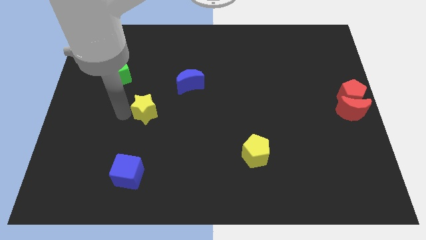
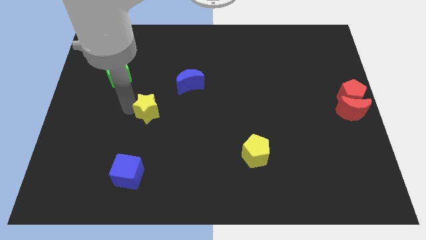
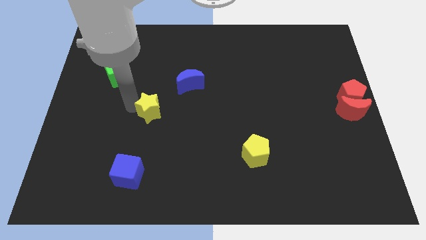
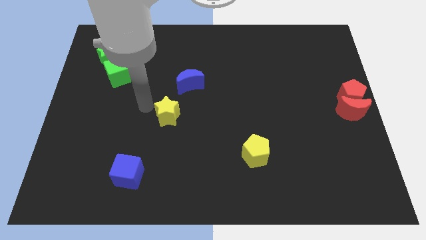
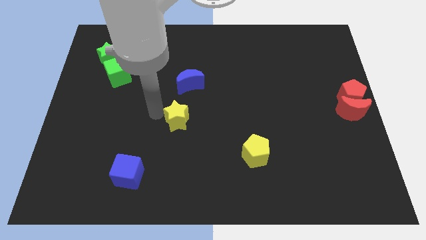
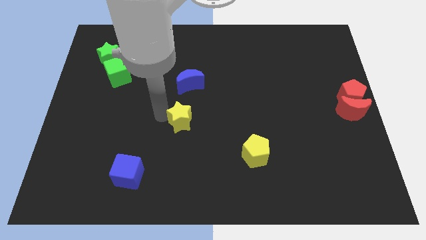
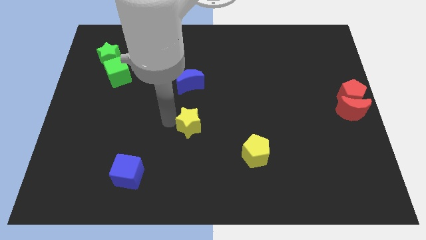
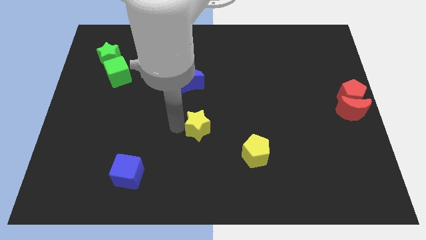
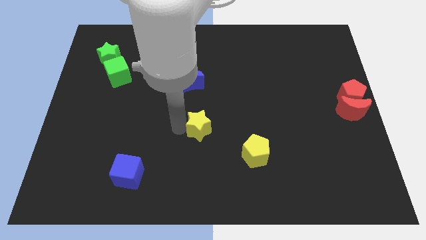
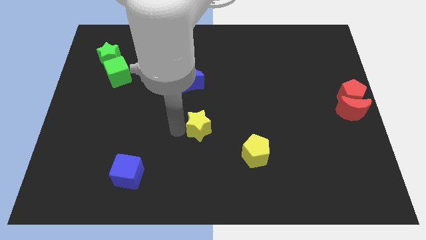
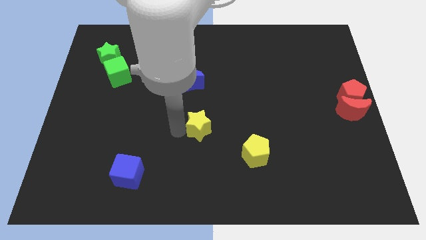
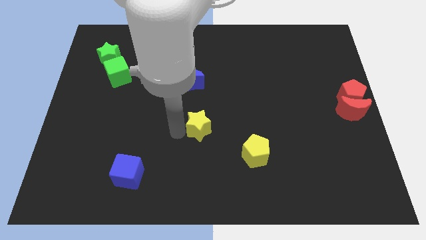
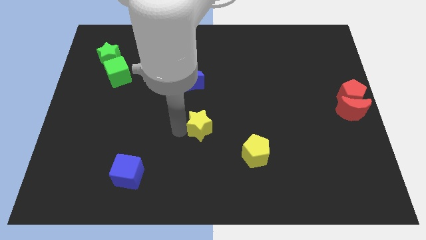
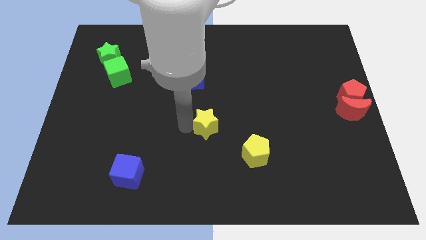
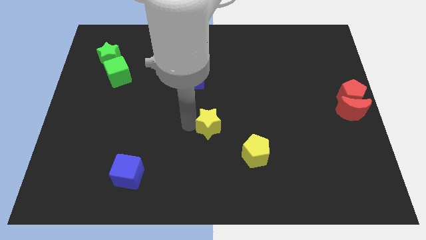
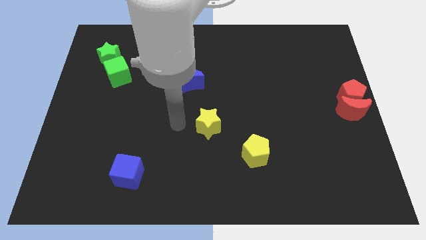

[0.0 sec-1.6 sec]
move the yellow star towards the center of the board

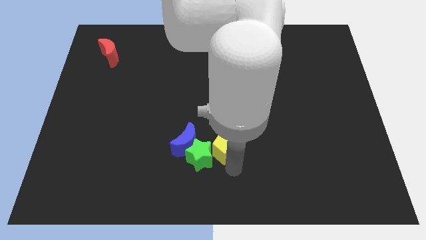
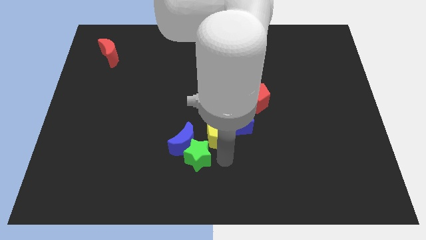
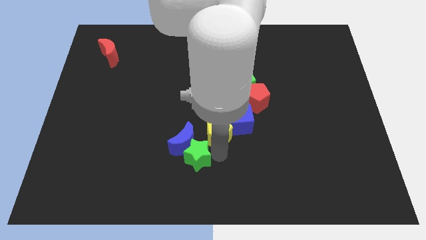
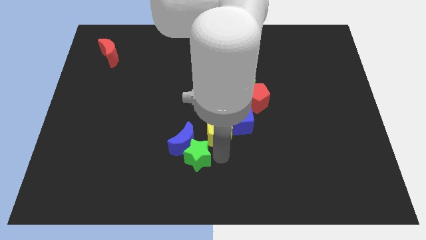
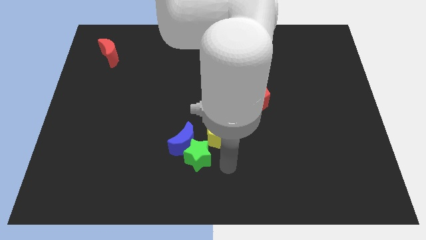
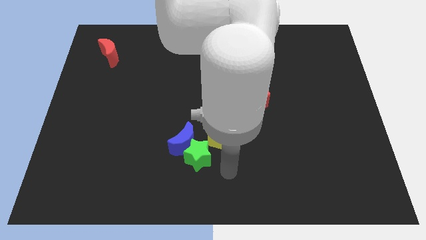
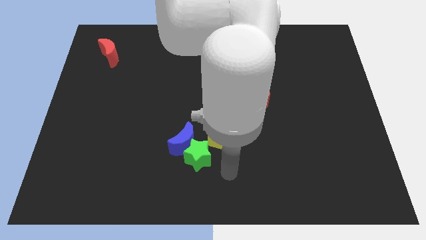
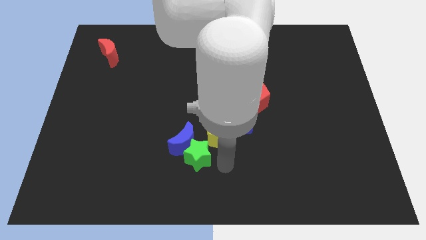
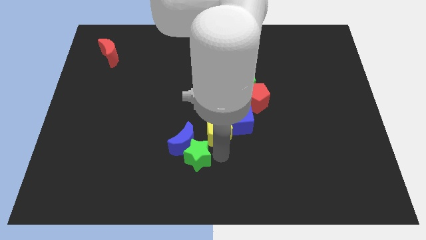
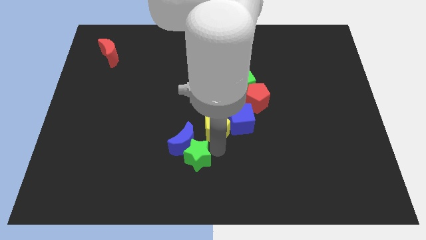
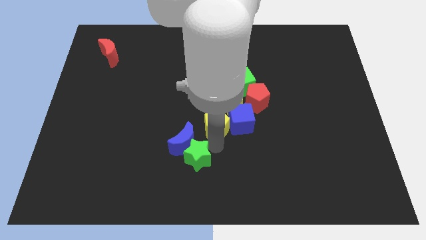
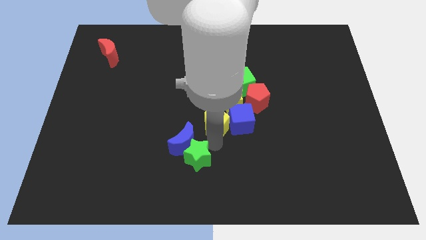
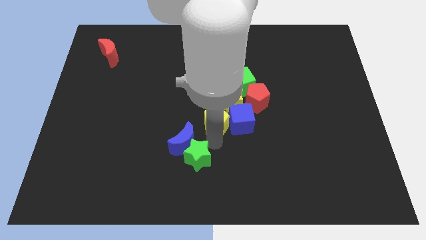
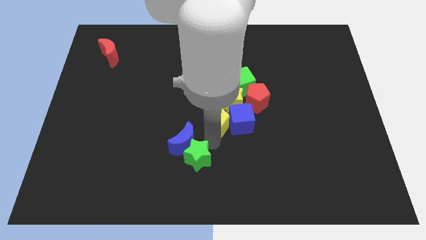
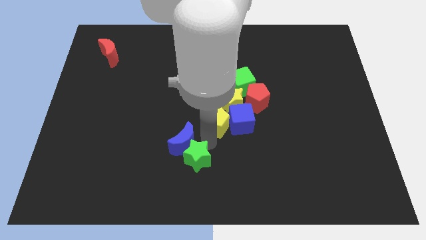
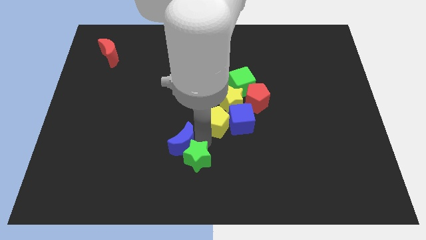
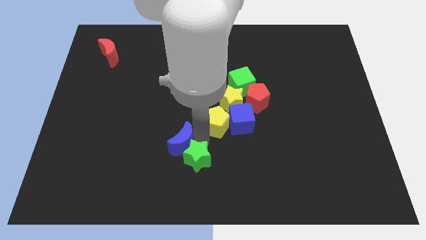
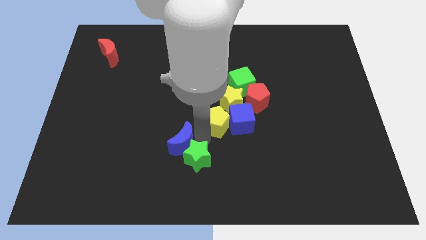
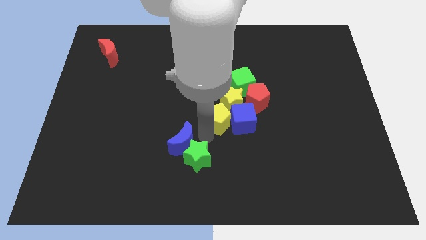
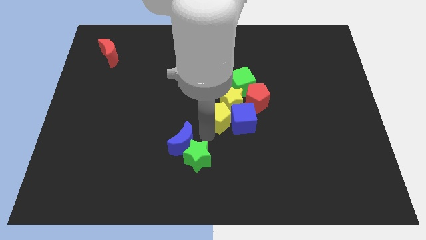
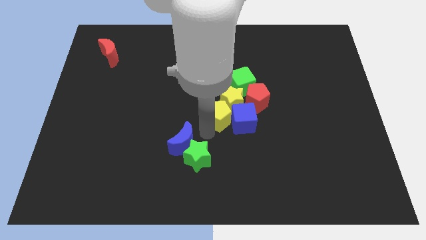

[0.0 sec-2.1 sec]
move yellow pentagon away from the green star and blue moon

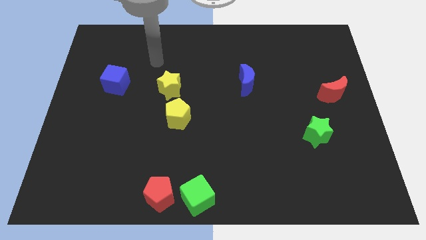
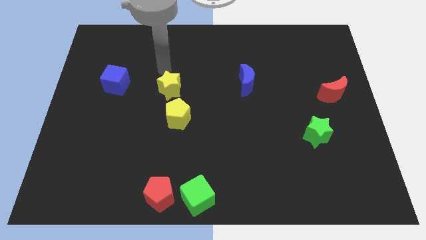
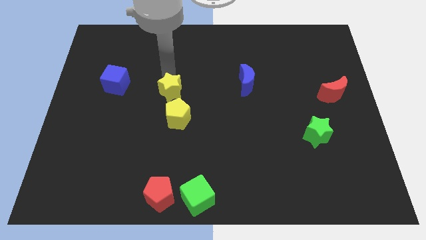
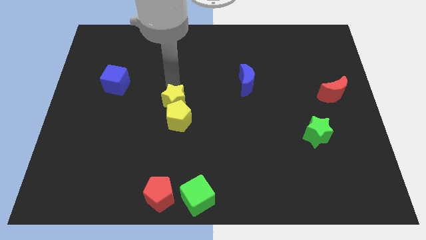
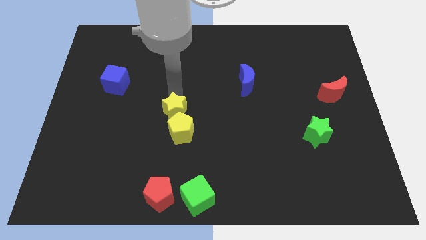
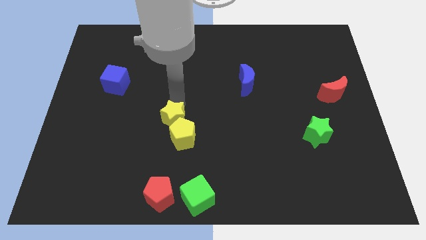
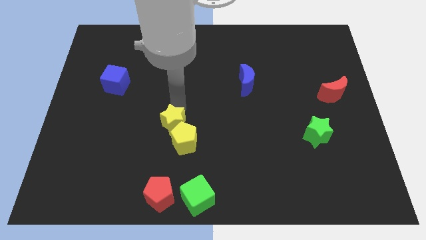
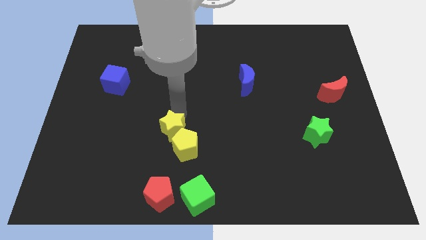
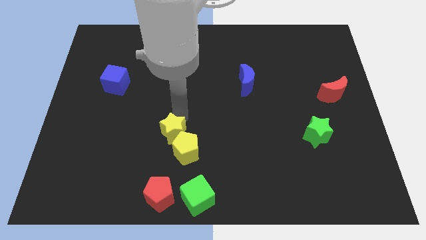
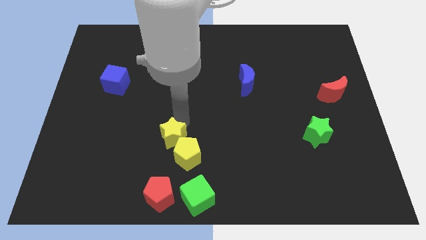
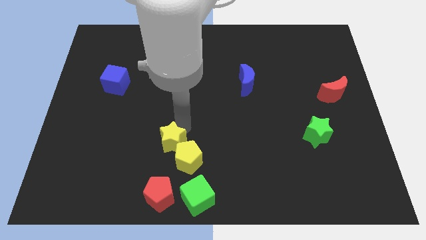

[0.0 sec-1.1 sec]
push yellow star into the yellow pentagon

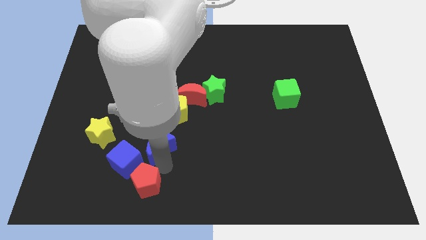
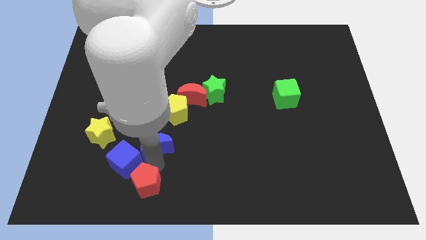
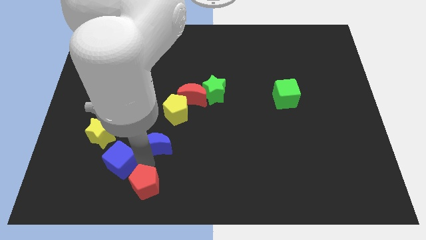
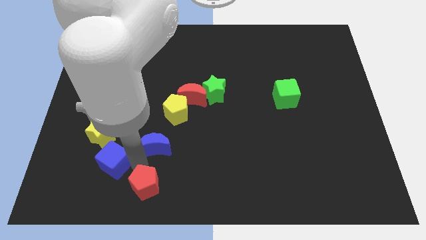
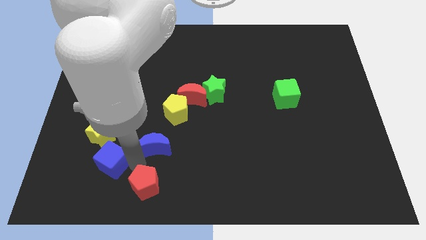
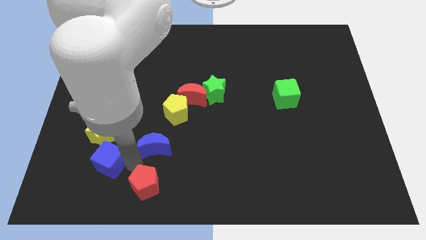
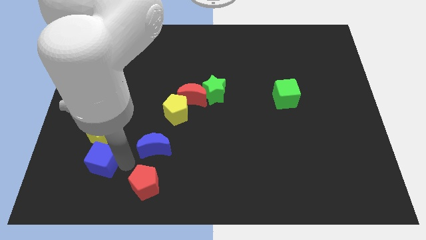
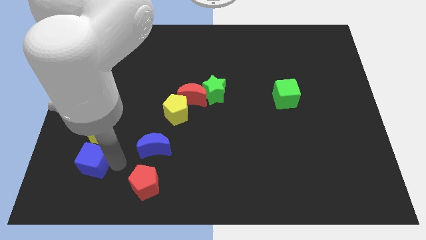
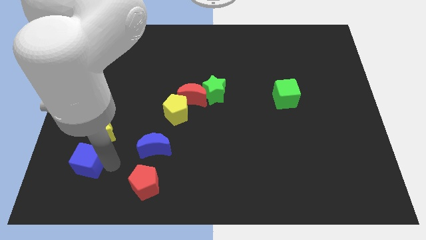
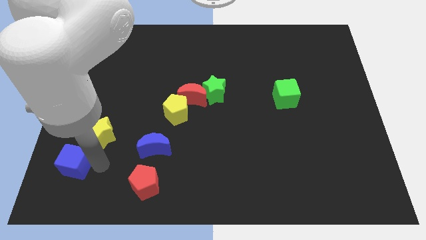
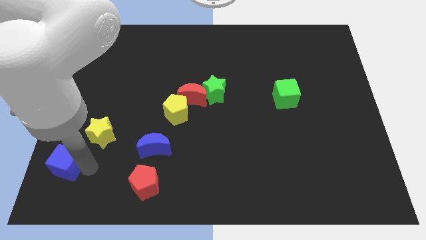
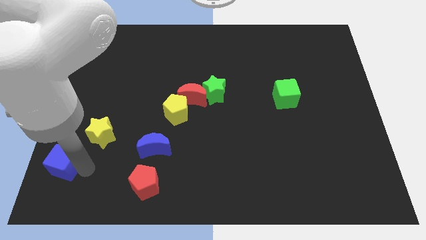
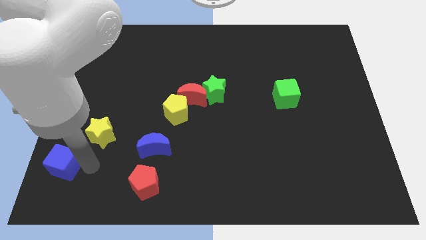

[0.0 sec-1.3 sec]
separate blue cube from the blue moon

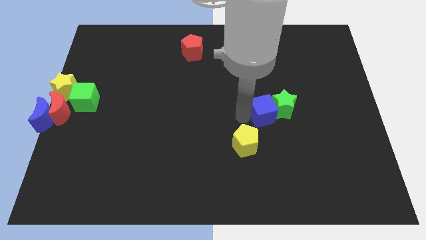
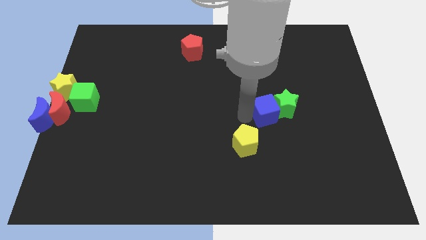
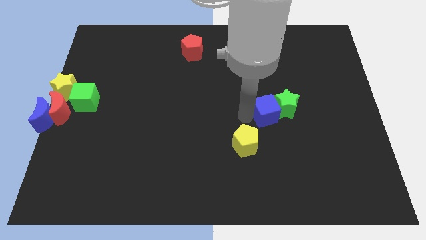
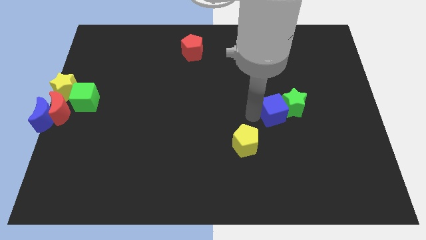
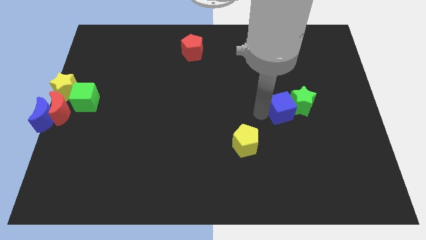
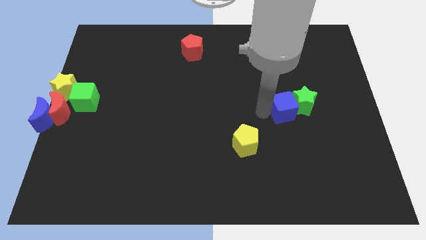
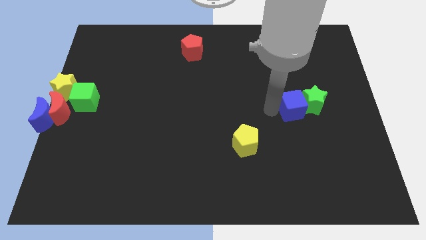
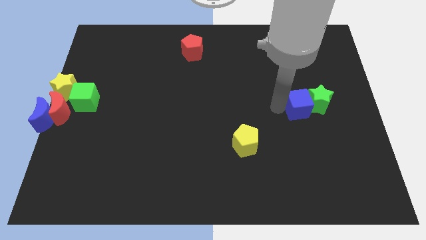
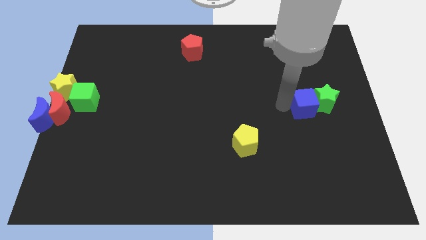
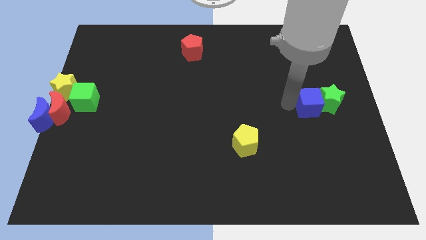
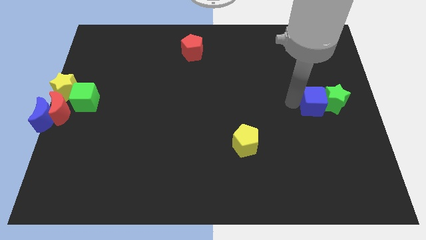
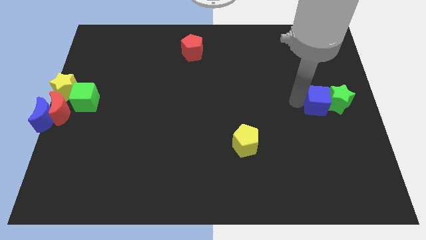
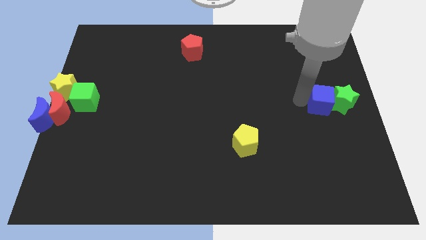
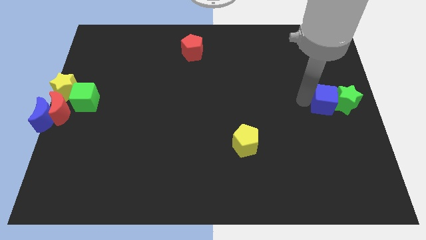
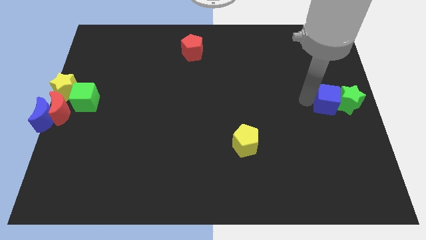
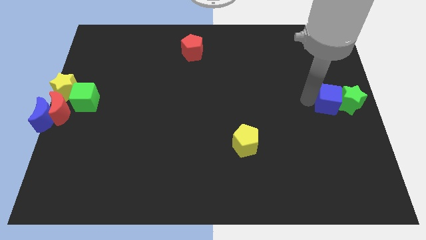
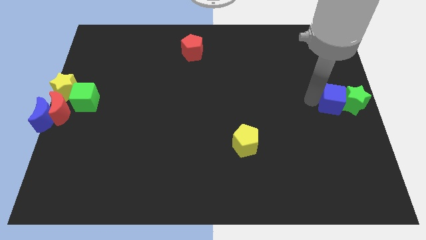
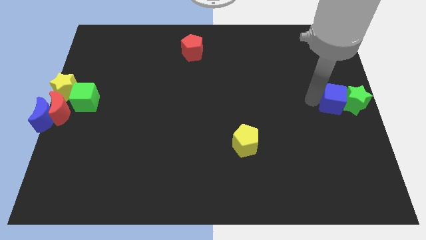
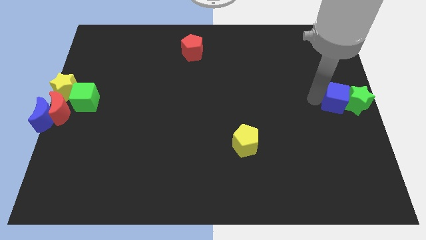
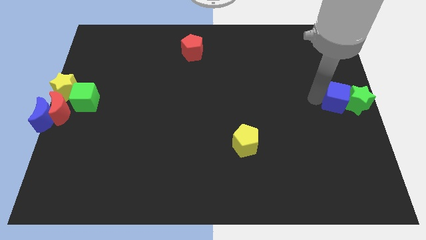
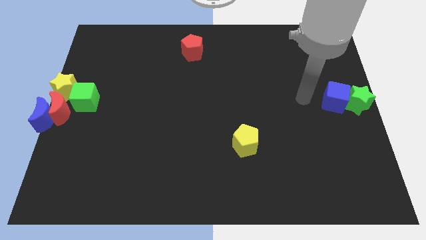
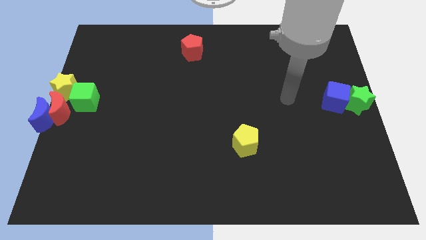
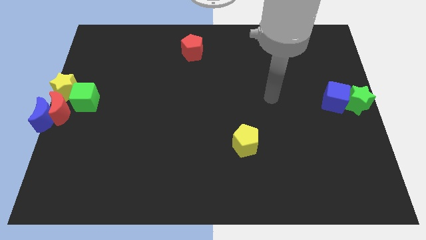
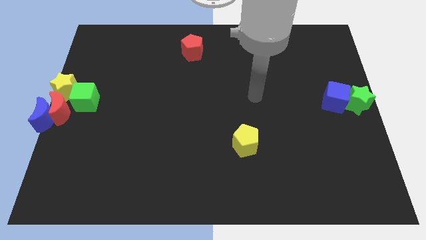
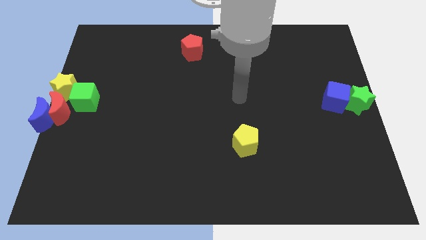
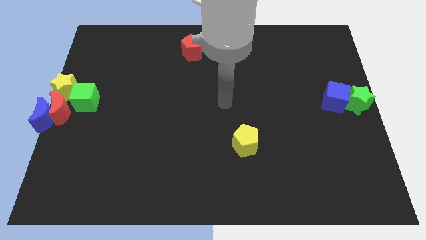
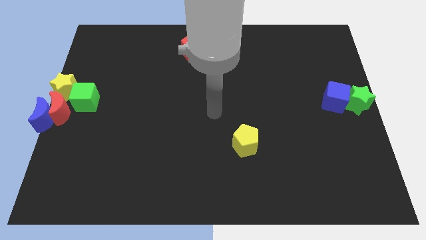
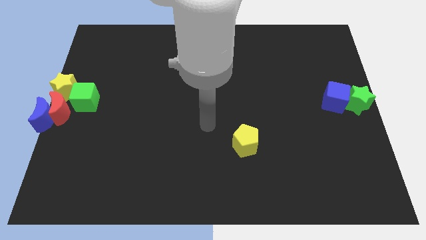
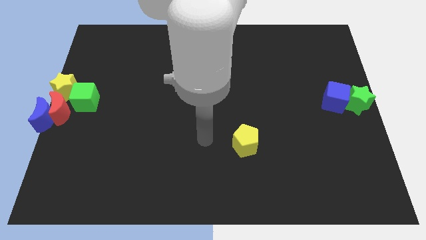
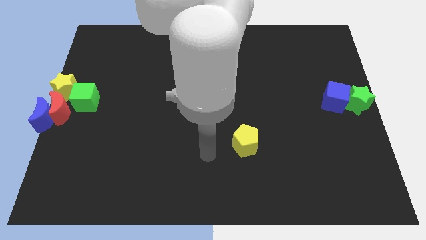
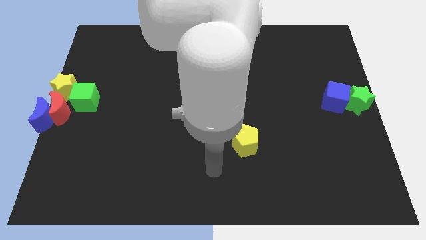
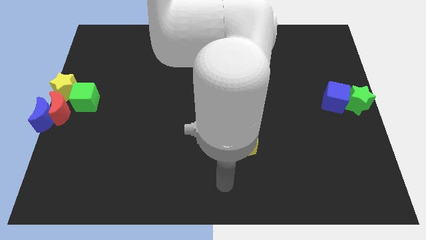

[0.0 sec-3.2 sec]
place the blue cube and green star at the center right of the board
